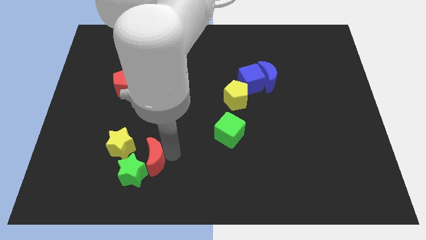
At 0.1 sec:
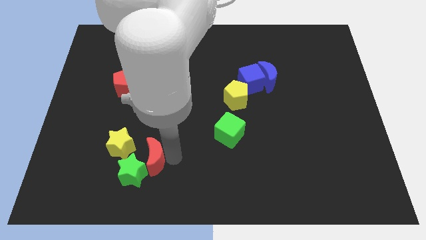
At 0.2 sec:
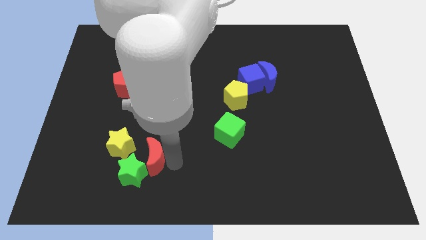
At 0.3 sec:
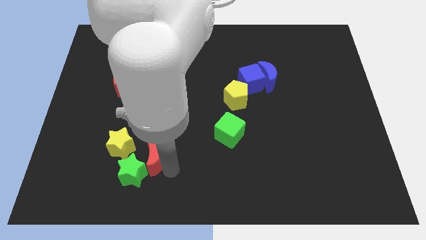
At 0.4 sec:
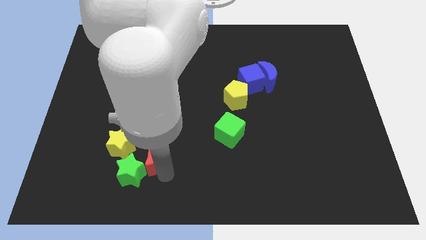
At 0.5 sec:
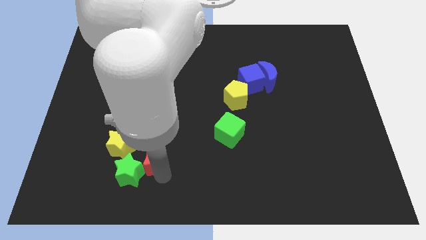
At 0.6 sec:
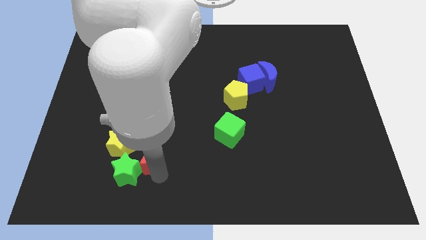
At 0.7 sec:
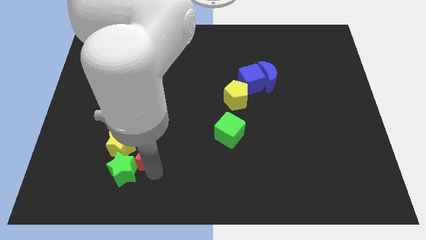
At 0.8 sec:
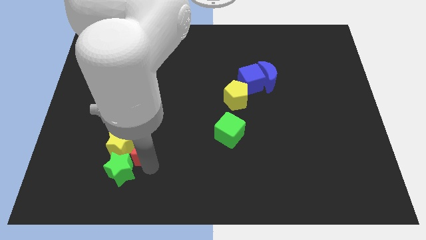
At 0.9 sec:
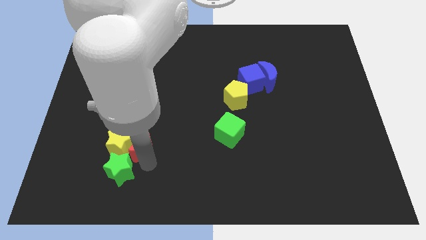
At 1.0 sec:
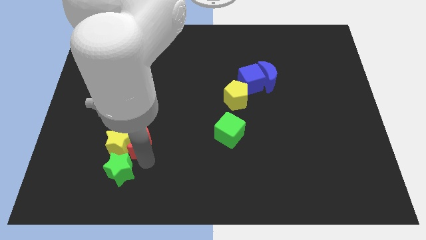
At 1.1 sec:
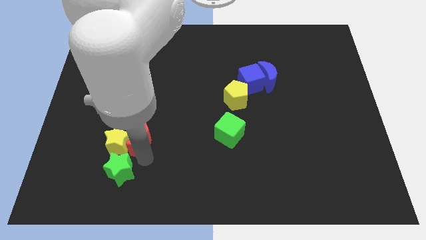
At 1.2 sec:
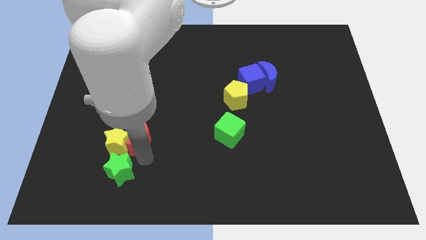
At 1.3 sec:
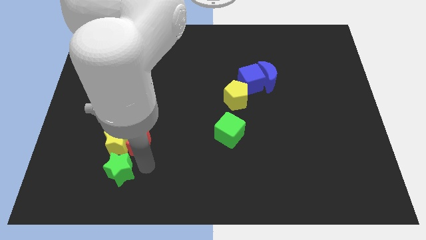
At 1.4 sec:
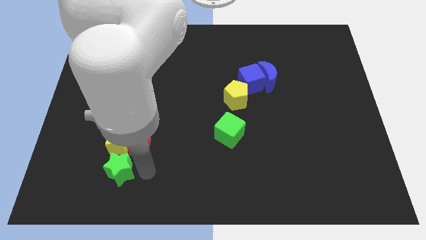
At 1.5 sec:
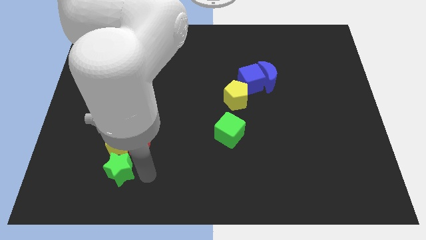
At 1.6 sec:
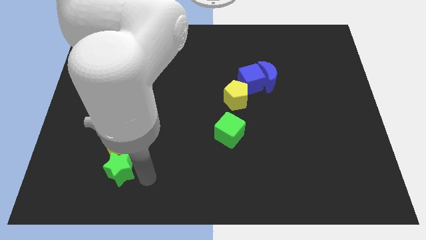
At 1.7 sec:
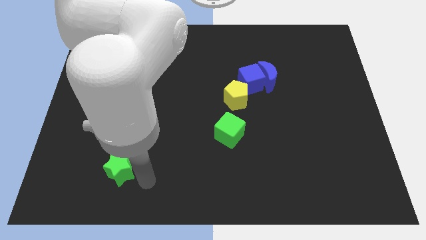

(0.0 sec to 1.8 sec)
push the red moon into the yellow star

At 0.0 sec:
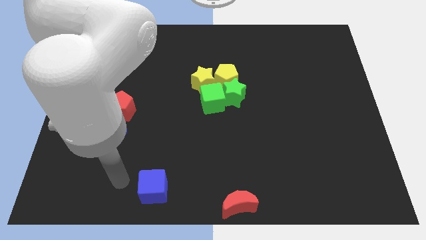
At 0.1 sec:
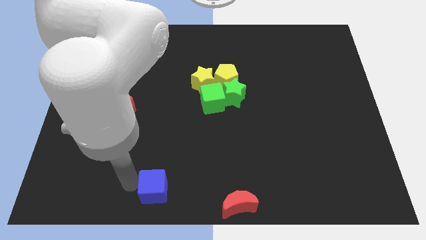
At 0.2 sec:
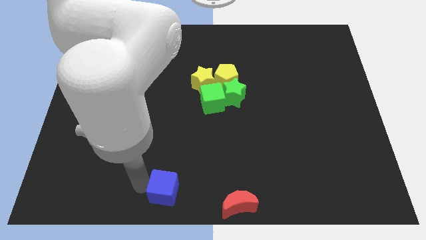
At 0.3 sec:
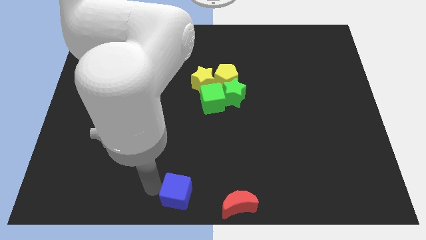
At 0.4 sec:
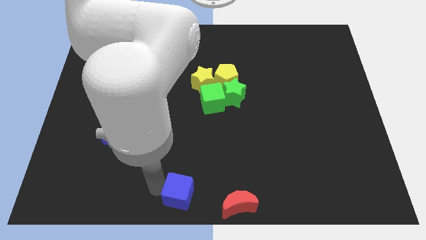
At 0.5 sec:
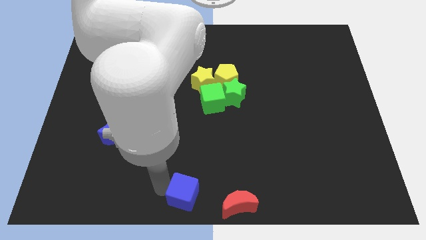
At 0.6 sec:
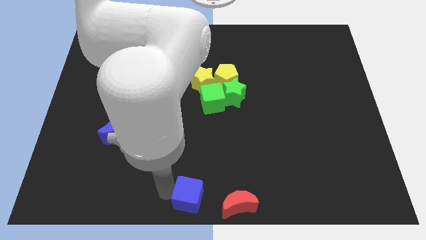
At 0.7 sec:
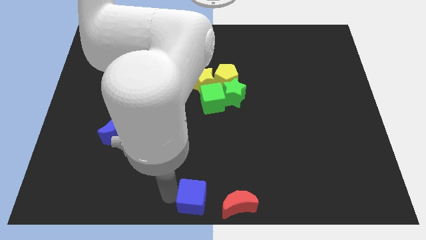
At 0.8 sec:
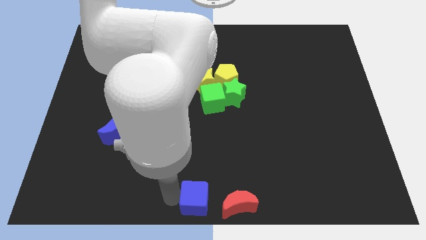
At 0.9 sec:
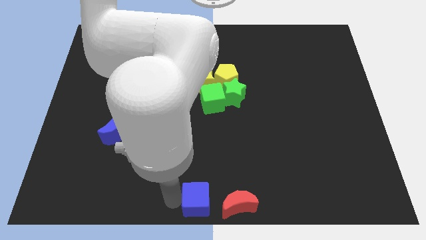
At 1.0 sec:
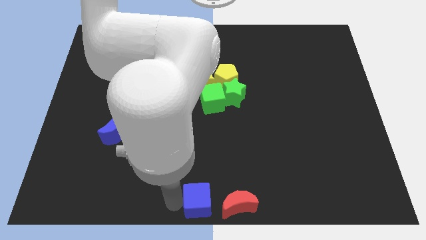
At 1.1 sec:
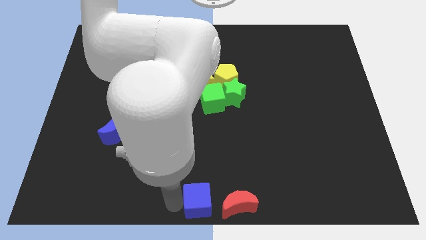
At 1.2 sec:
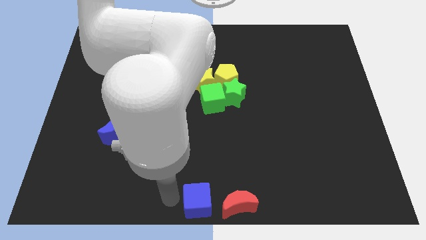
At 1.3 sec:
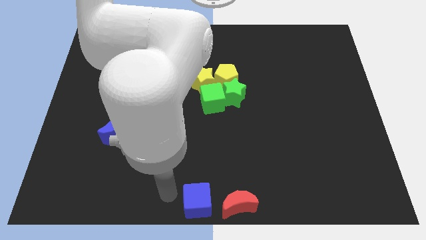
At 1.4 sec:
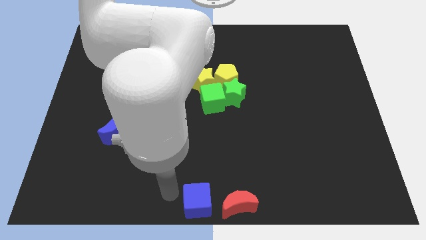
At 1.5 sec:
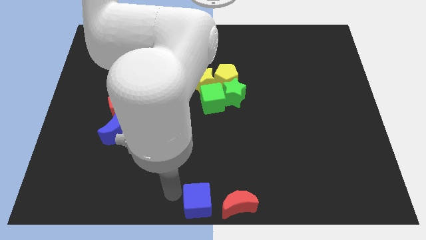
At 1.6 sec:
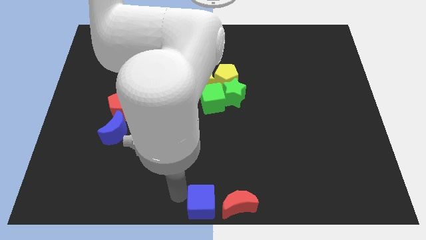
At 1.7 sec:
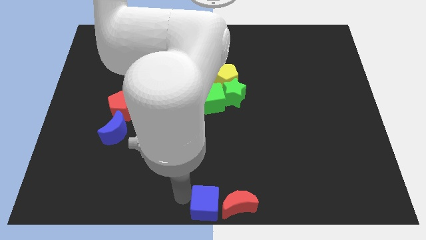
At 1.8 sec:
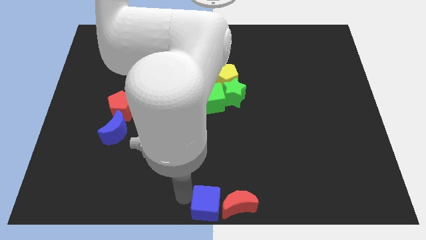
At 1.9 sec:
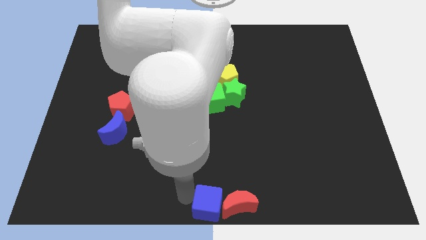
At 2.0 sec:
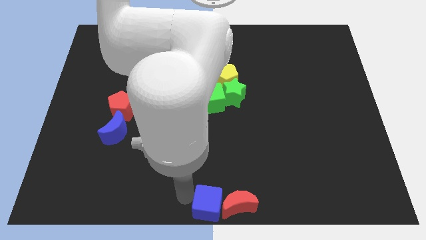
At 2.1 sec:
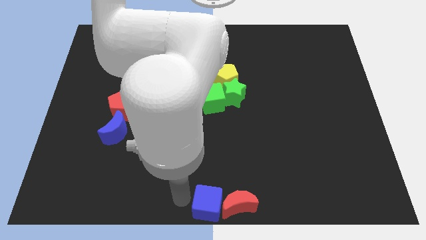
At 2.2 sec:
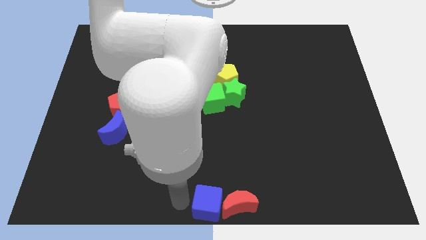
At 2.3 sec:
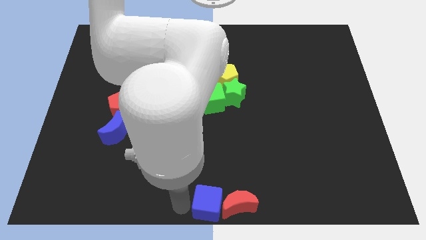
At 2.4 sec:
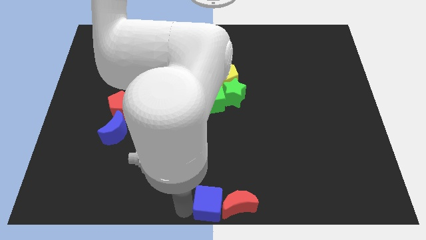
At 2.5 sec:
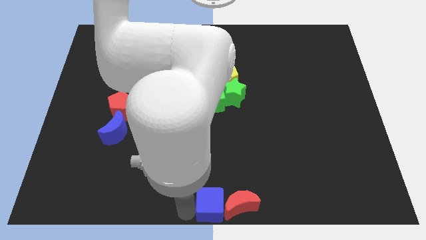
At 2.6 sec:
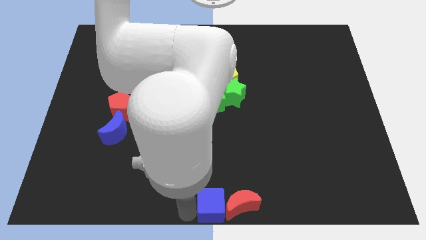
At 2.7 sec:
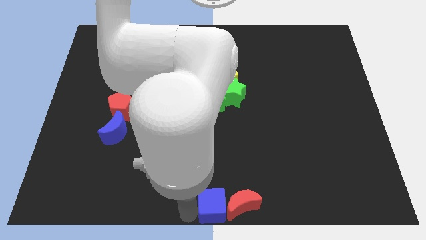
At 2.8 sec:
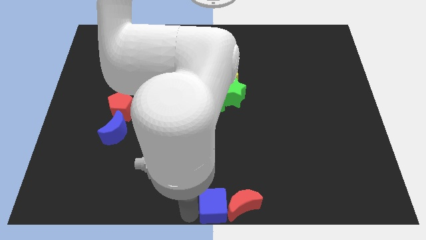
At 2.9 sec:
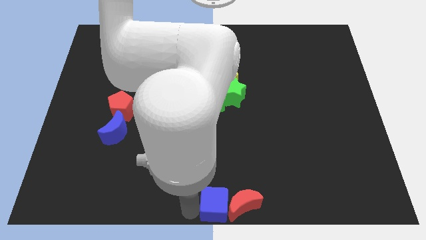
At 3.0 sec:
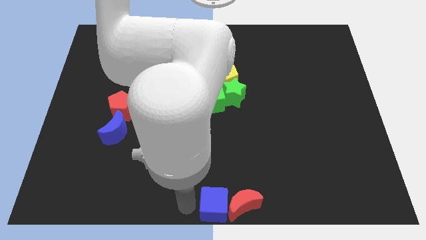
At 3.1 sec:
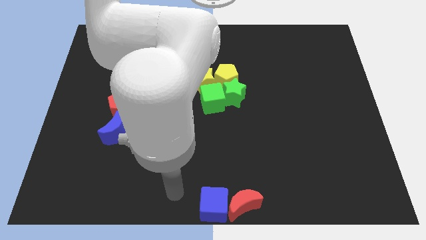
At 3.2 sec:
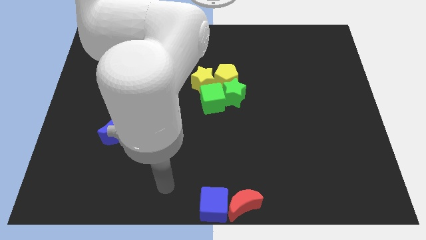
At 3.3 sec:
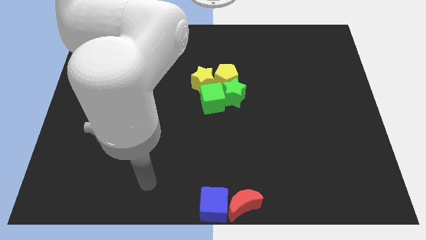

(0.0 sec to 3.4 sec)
make the blue cube to touch the red crescent

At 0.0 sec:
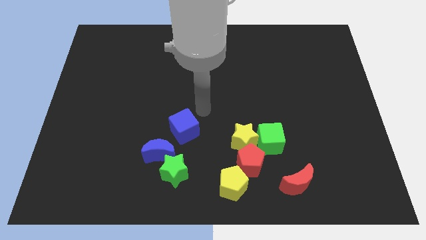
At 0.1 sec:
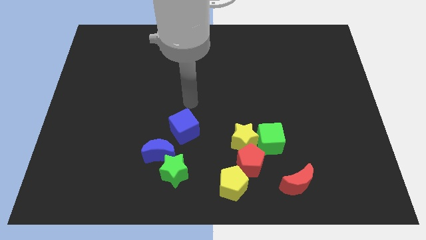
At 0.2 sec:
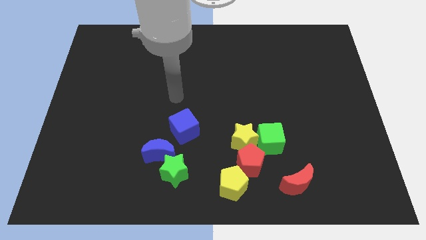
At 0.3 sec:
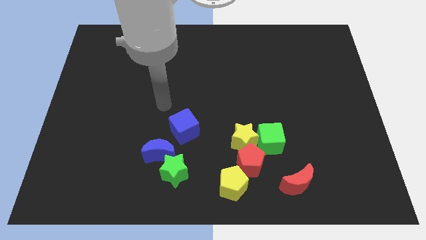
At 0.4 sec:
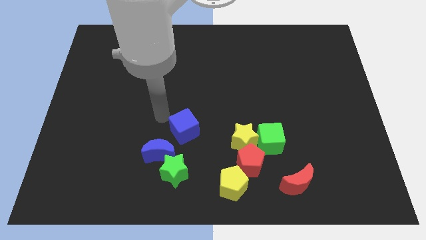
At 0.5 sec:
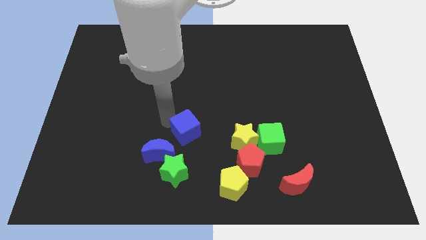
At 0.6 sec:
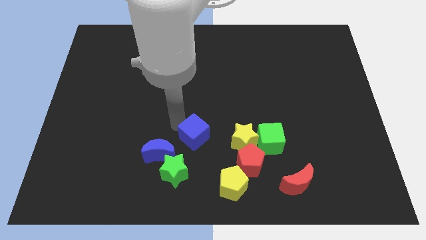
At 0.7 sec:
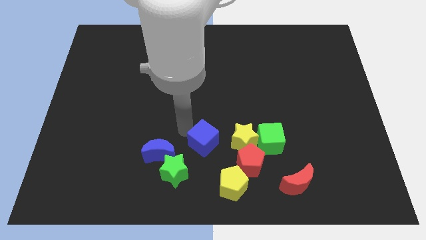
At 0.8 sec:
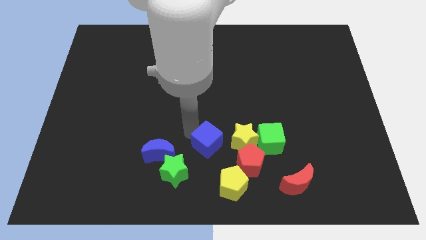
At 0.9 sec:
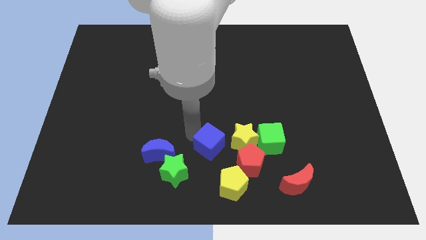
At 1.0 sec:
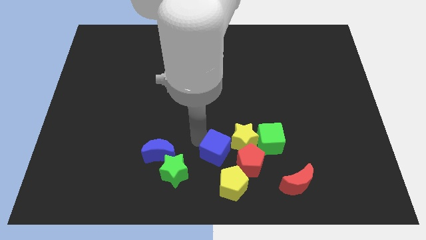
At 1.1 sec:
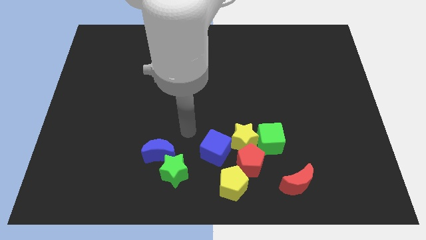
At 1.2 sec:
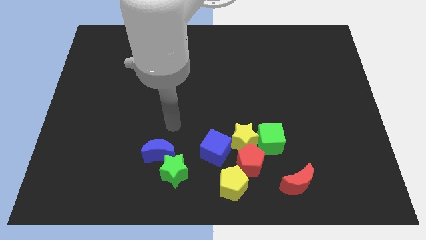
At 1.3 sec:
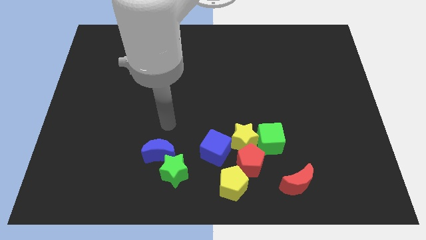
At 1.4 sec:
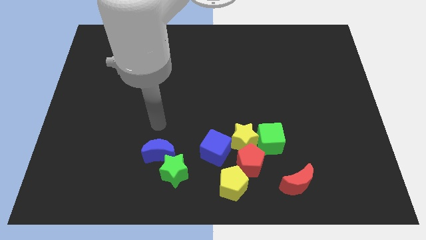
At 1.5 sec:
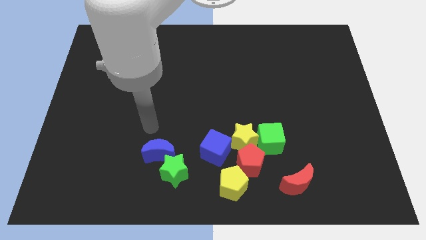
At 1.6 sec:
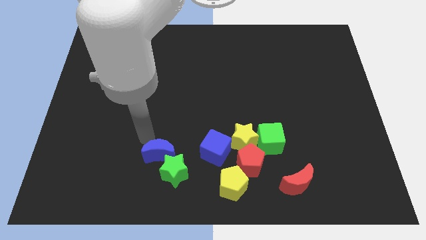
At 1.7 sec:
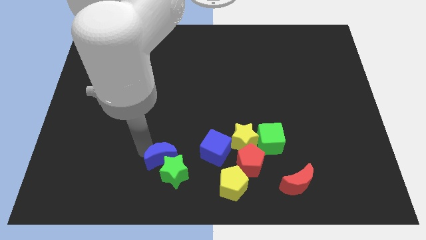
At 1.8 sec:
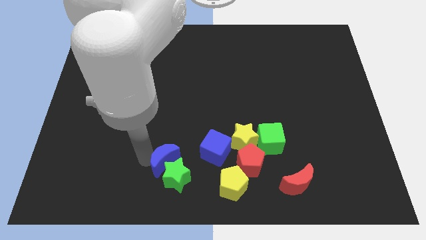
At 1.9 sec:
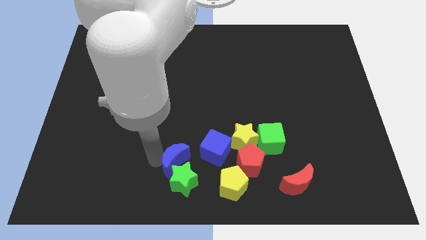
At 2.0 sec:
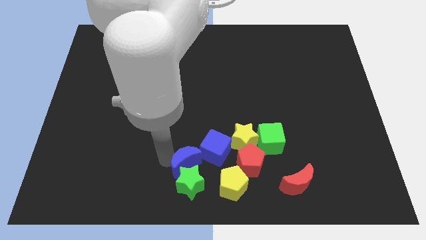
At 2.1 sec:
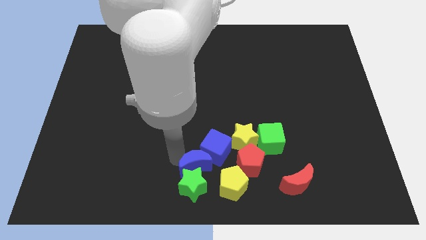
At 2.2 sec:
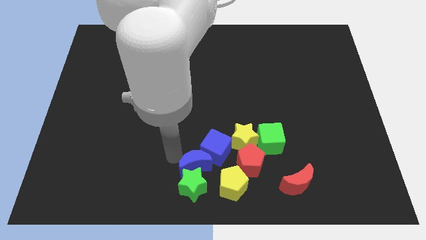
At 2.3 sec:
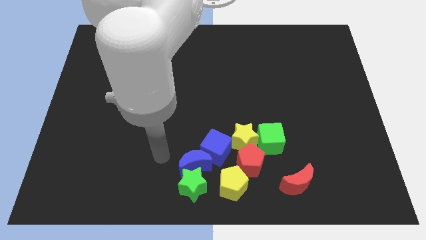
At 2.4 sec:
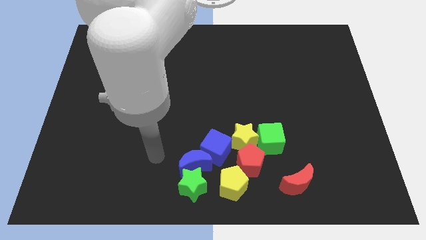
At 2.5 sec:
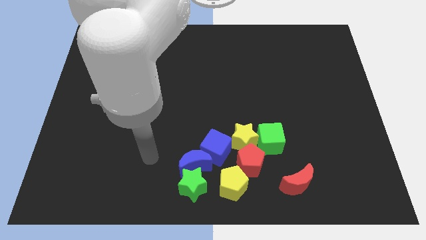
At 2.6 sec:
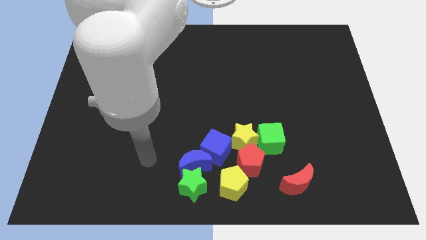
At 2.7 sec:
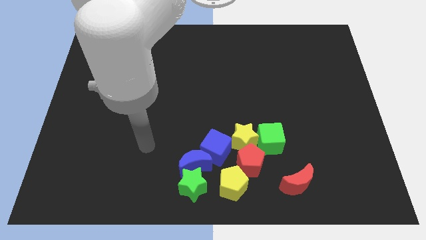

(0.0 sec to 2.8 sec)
push the blue crescent into the green star

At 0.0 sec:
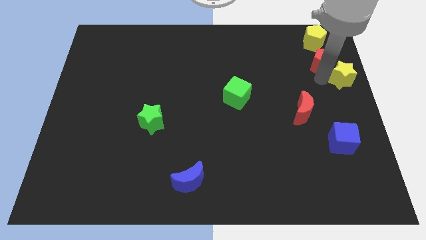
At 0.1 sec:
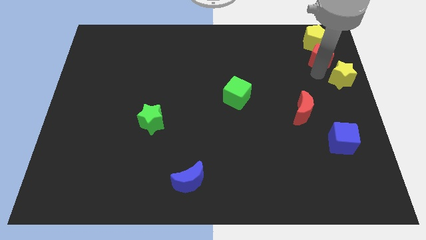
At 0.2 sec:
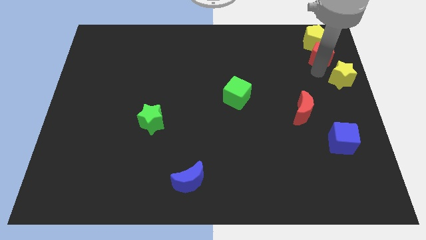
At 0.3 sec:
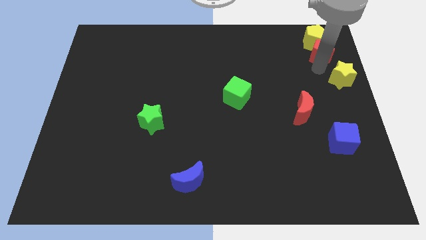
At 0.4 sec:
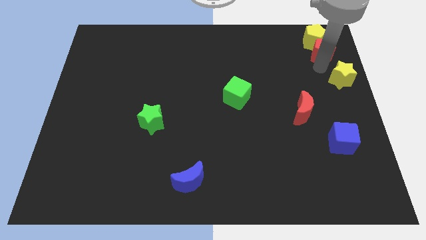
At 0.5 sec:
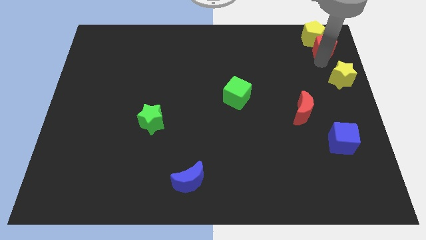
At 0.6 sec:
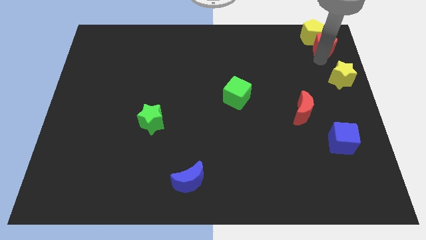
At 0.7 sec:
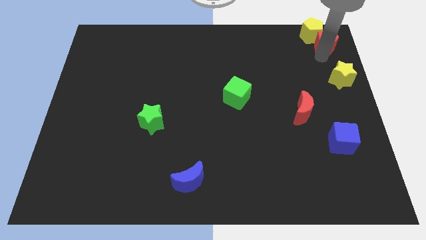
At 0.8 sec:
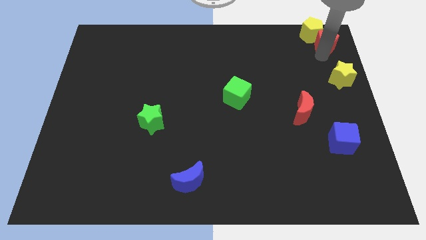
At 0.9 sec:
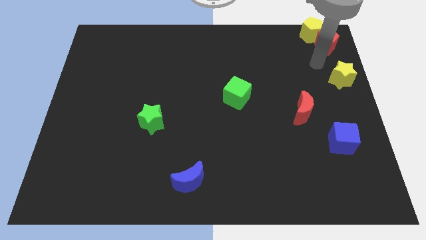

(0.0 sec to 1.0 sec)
push the red pentagon into the yellow pentagon
